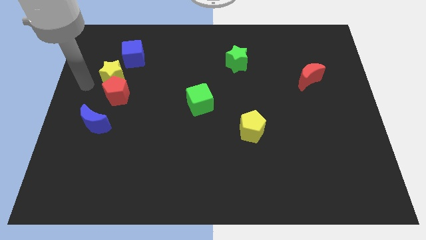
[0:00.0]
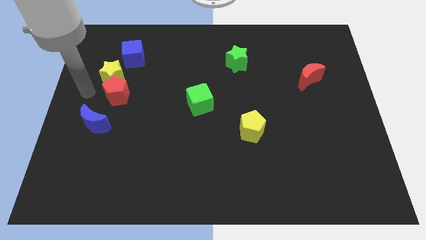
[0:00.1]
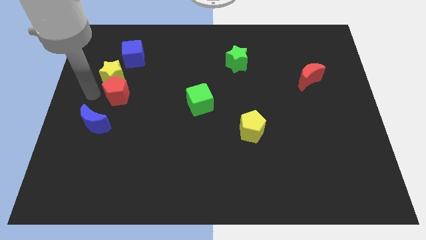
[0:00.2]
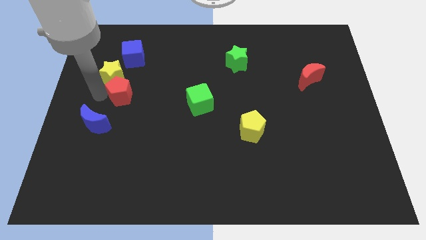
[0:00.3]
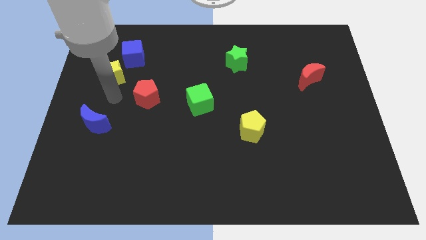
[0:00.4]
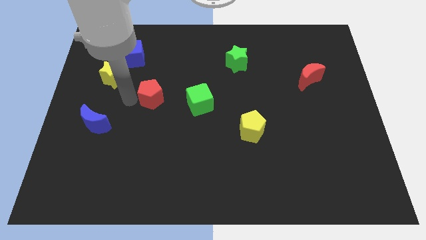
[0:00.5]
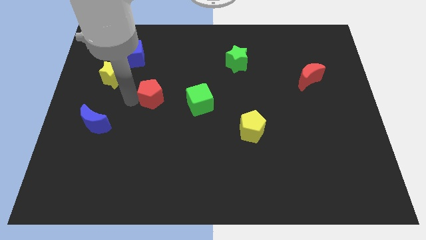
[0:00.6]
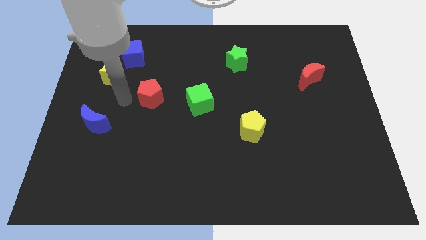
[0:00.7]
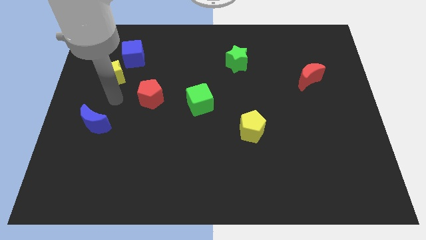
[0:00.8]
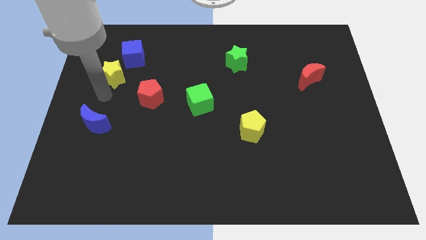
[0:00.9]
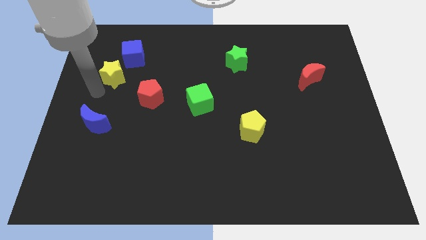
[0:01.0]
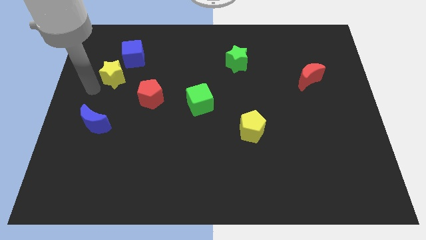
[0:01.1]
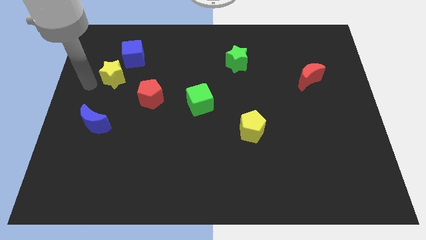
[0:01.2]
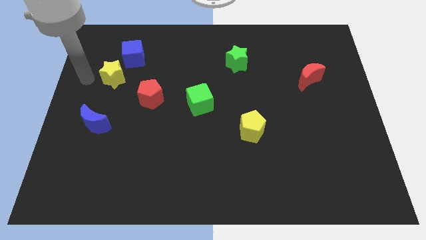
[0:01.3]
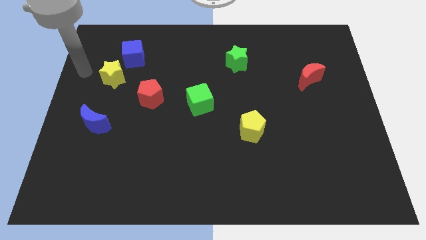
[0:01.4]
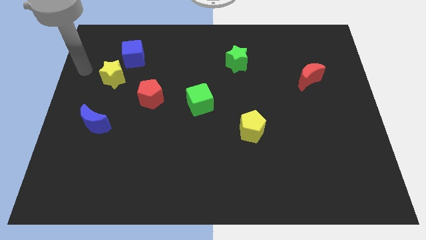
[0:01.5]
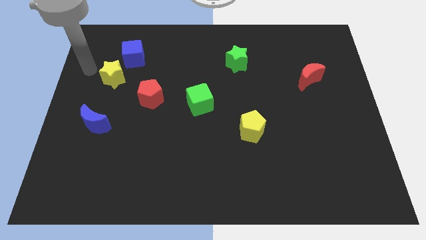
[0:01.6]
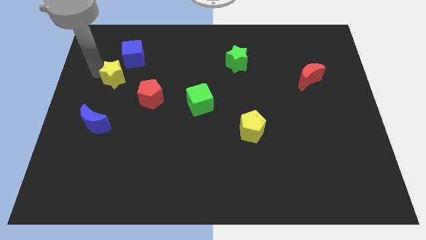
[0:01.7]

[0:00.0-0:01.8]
place the red pentagon diagonal to the blue cube

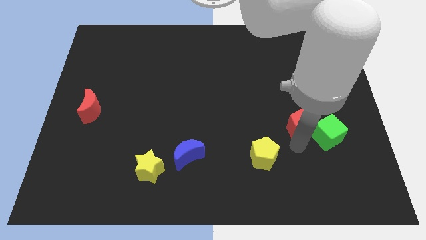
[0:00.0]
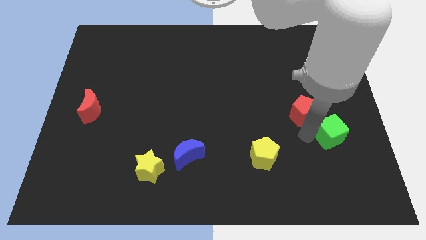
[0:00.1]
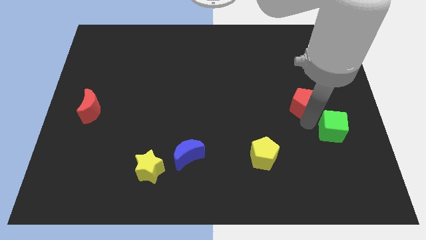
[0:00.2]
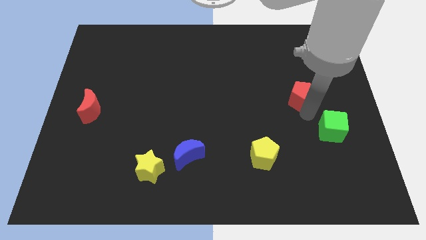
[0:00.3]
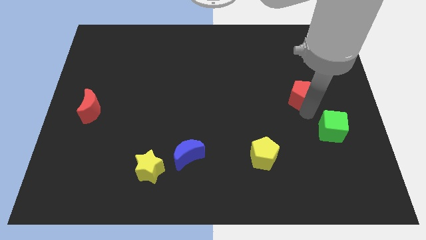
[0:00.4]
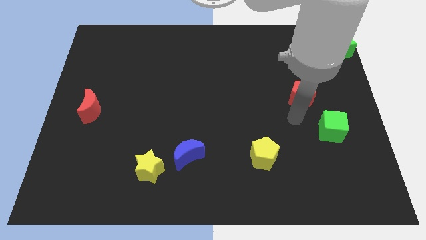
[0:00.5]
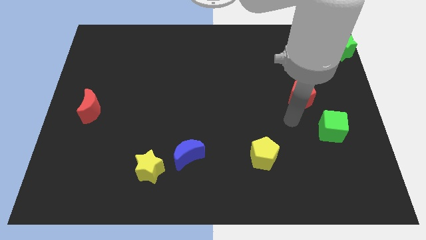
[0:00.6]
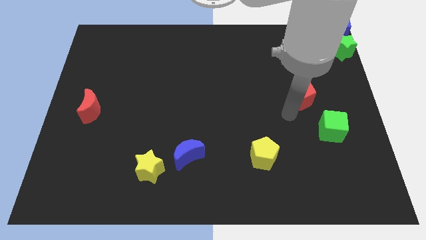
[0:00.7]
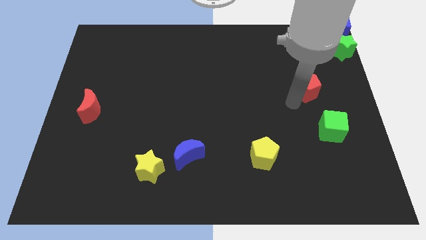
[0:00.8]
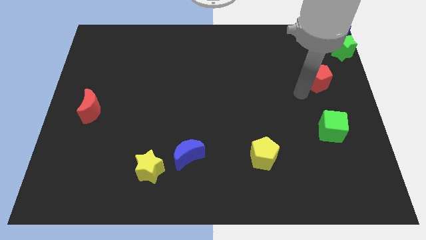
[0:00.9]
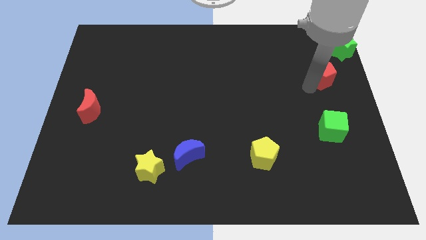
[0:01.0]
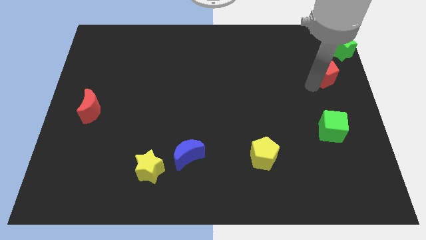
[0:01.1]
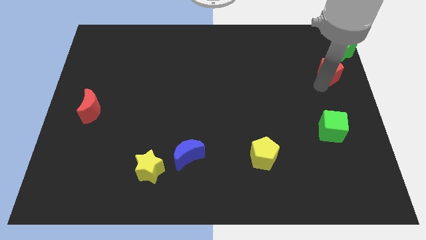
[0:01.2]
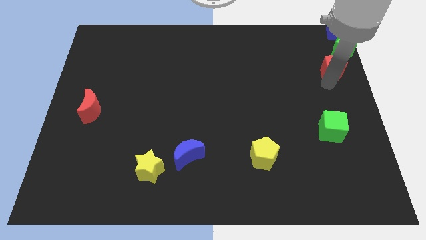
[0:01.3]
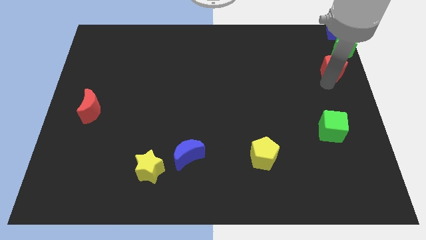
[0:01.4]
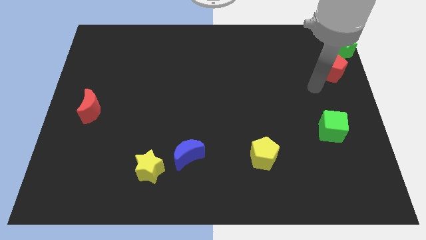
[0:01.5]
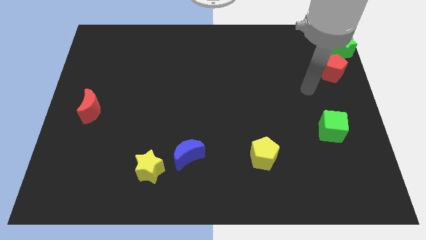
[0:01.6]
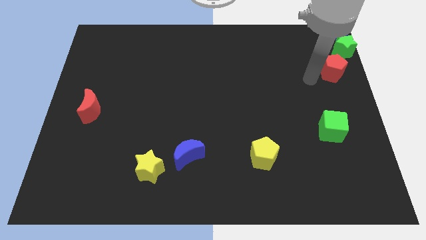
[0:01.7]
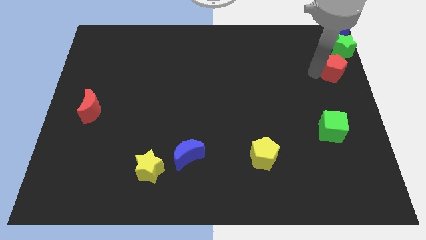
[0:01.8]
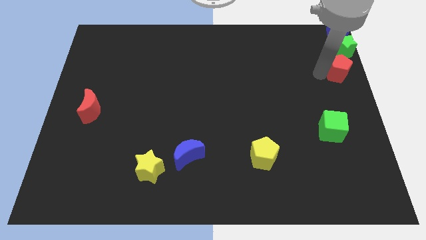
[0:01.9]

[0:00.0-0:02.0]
place the red pentagon close to the green star

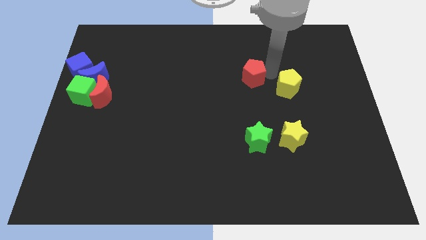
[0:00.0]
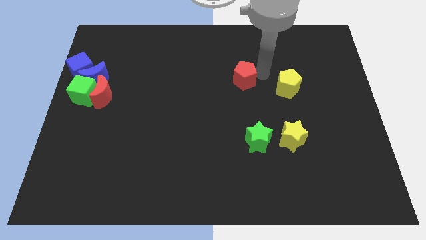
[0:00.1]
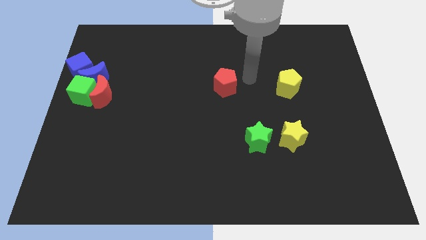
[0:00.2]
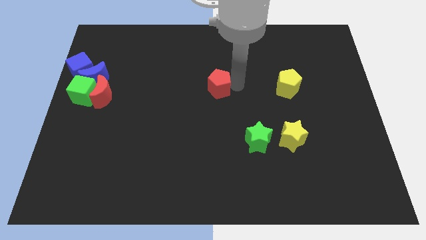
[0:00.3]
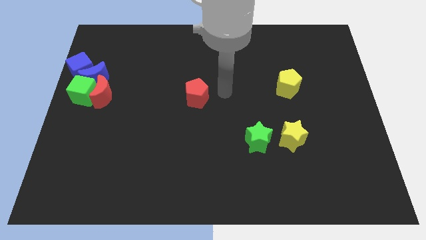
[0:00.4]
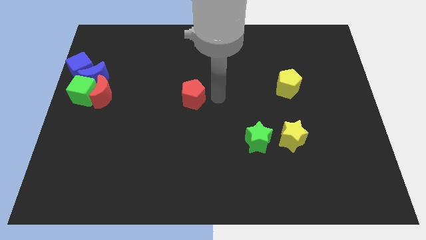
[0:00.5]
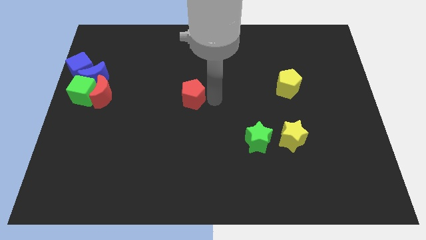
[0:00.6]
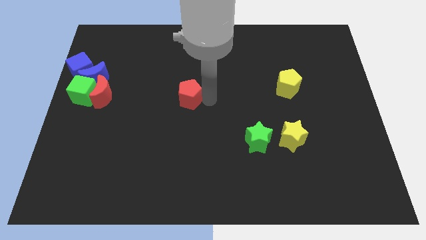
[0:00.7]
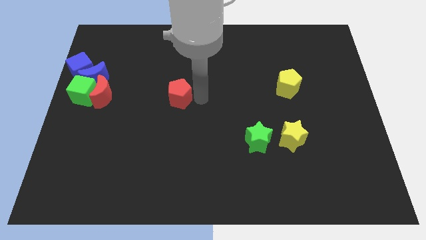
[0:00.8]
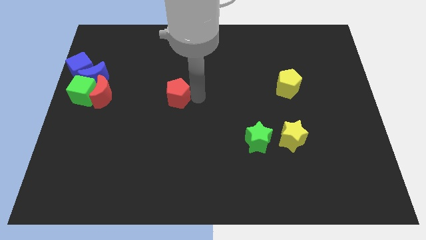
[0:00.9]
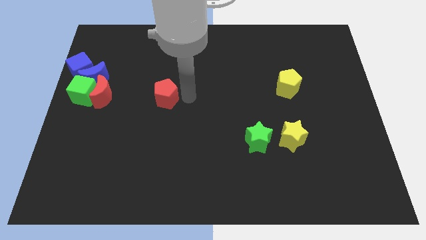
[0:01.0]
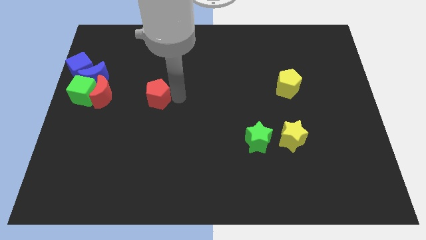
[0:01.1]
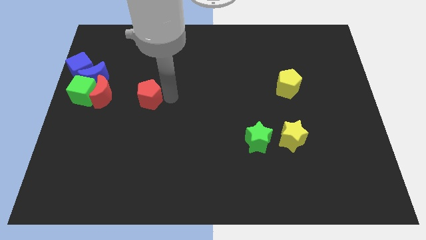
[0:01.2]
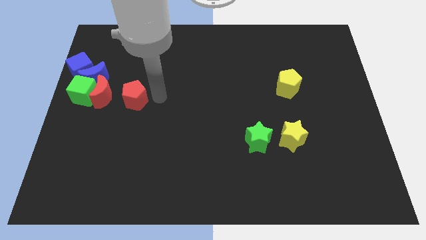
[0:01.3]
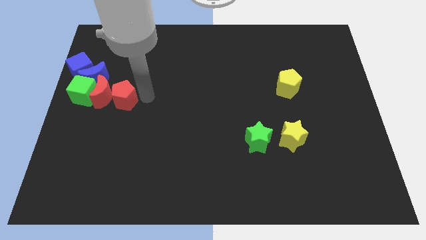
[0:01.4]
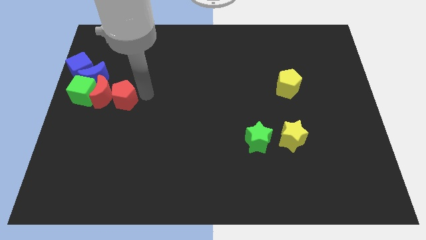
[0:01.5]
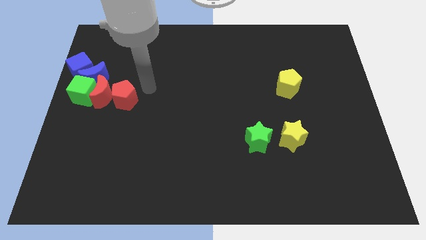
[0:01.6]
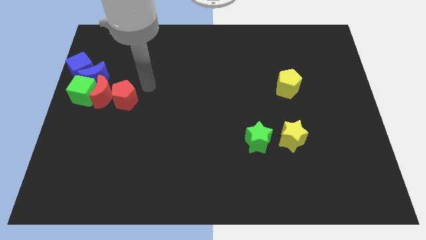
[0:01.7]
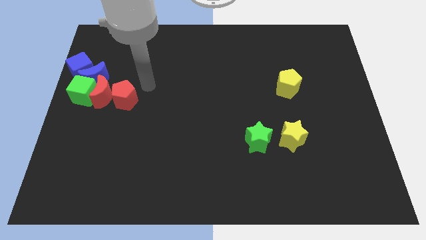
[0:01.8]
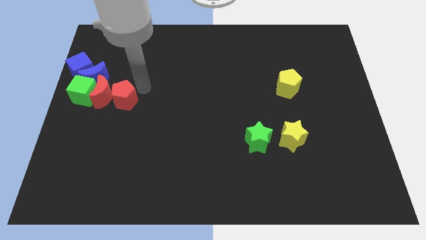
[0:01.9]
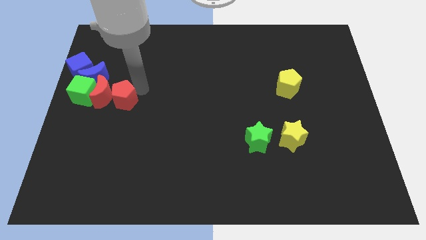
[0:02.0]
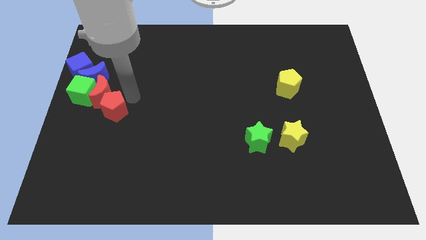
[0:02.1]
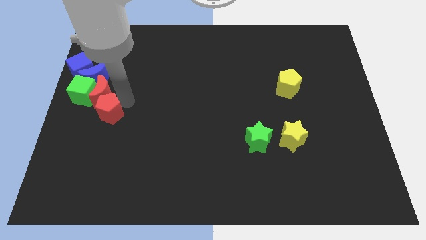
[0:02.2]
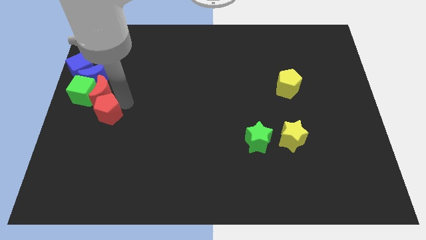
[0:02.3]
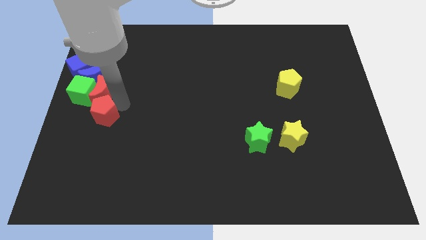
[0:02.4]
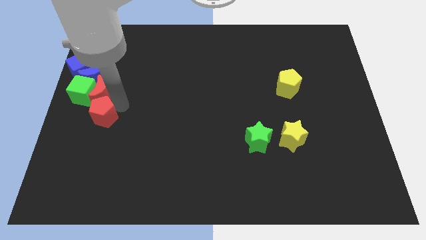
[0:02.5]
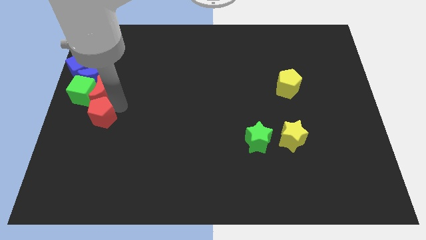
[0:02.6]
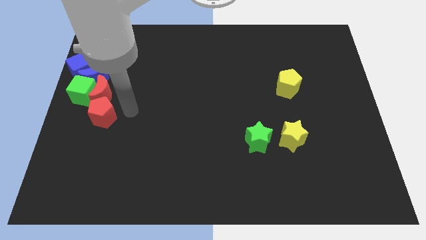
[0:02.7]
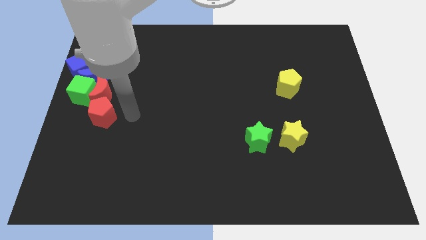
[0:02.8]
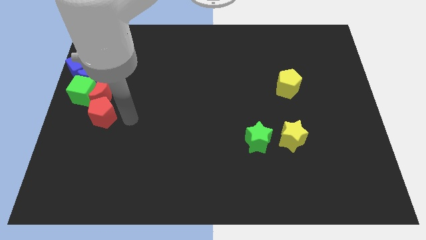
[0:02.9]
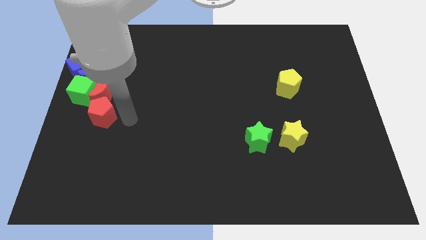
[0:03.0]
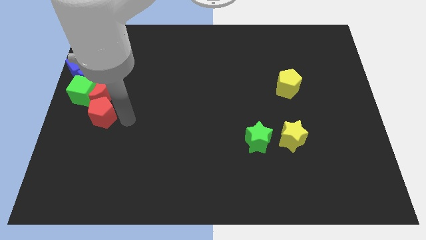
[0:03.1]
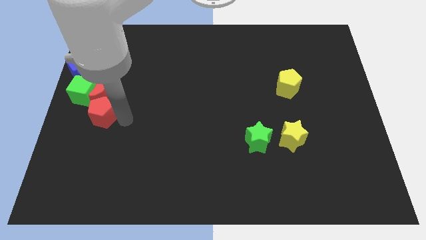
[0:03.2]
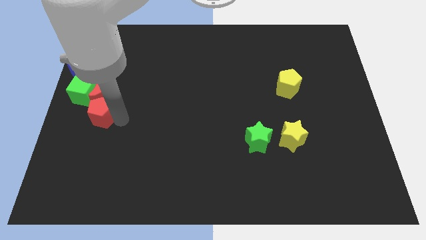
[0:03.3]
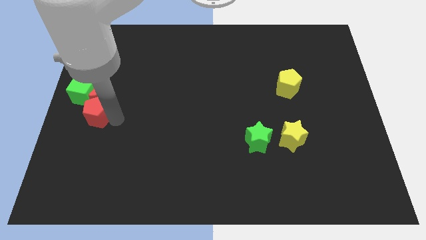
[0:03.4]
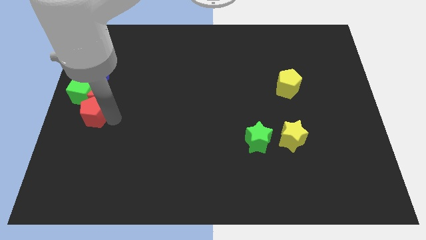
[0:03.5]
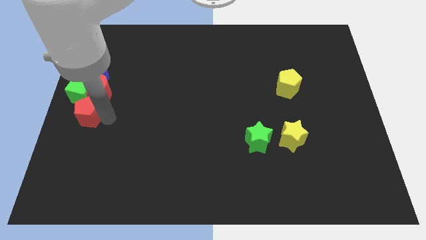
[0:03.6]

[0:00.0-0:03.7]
place the red pentagon to the bottom side of the red crescent

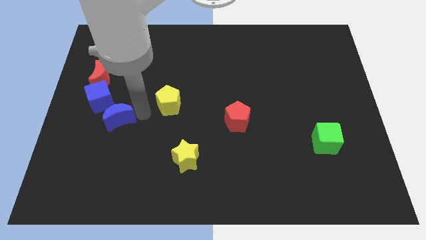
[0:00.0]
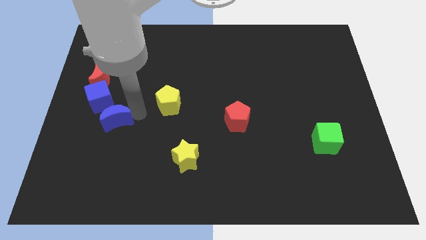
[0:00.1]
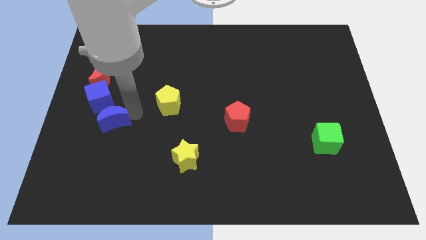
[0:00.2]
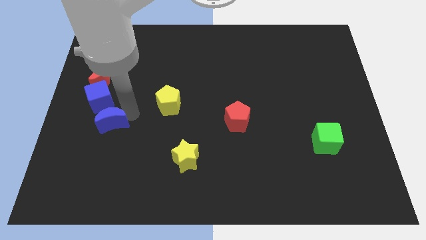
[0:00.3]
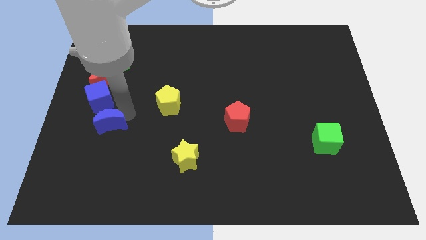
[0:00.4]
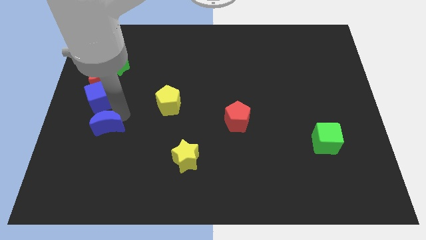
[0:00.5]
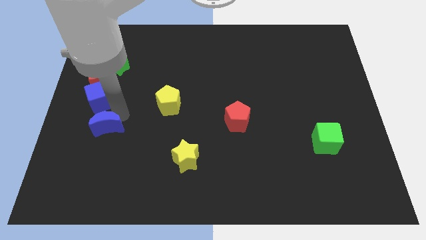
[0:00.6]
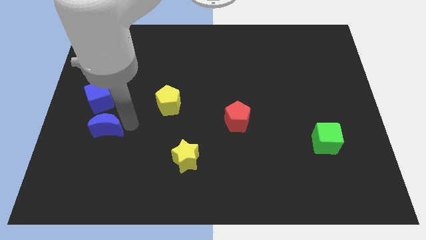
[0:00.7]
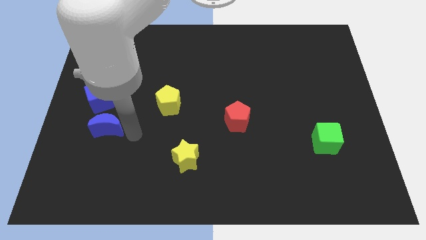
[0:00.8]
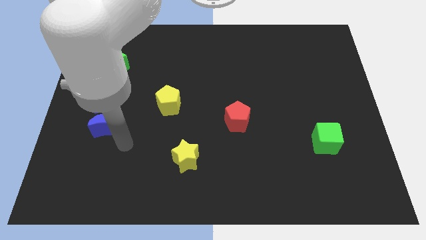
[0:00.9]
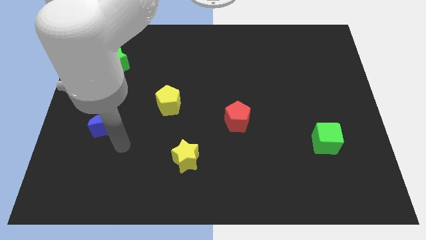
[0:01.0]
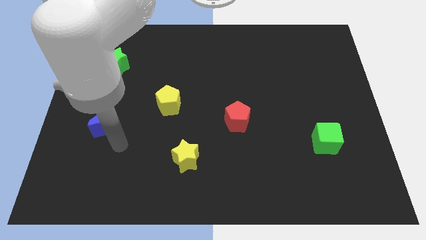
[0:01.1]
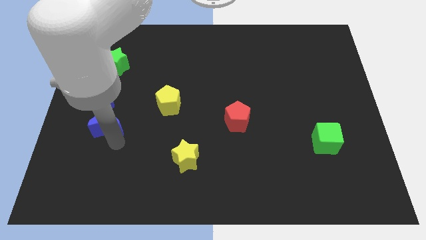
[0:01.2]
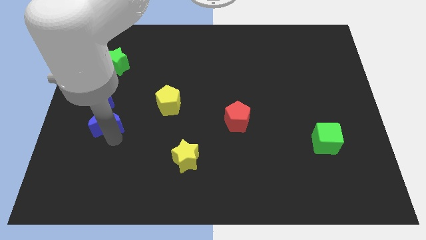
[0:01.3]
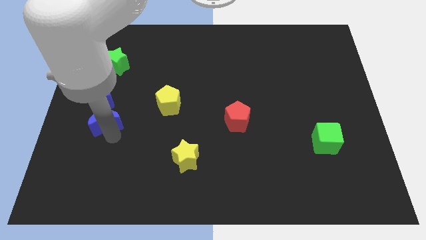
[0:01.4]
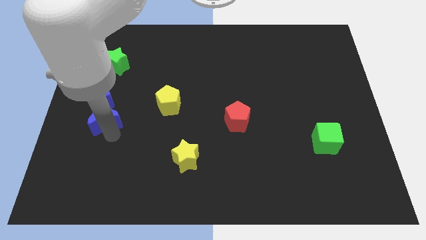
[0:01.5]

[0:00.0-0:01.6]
put the blue moon underneath the blue cube
